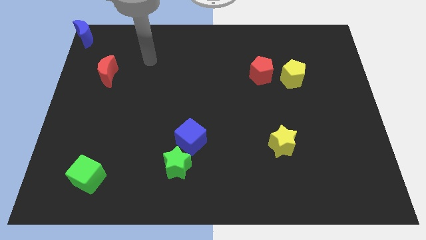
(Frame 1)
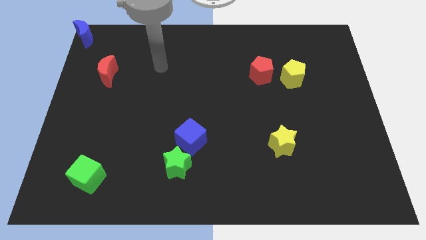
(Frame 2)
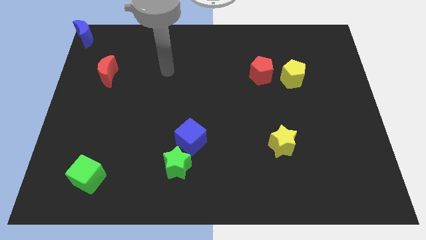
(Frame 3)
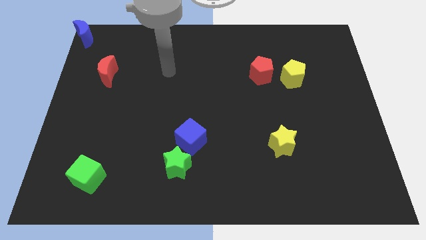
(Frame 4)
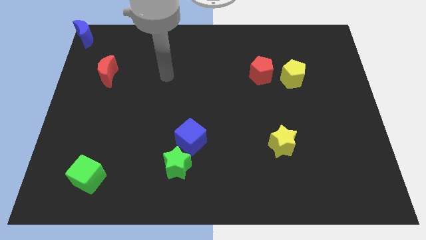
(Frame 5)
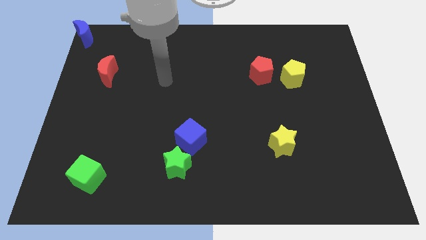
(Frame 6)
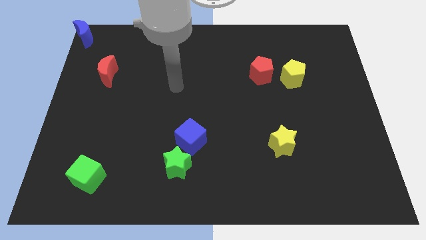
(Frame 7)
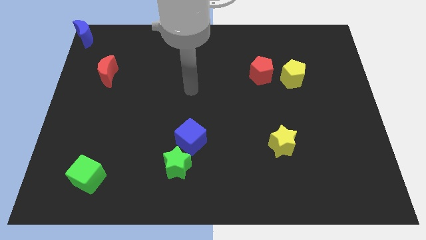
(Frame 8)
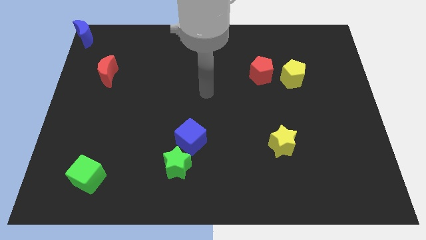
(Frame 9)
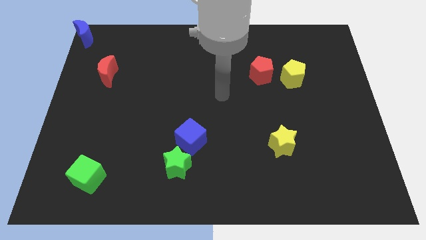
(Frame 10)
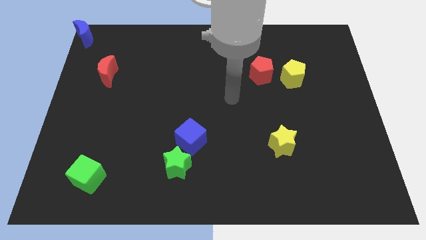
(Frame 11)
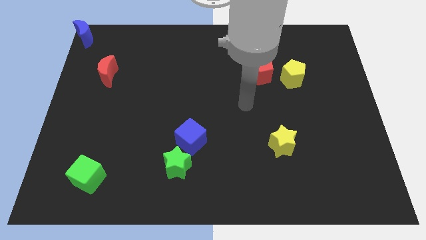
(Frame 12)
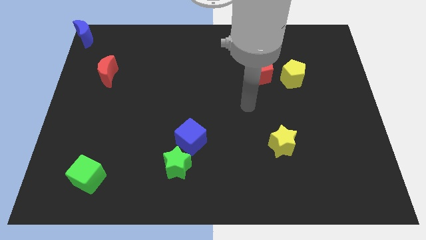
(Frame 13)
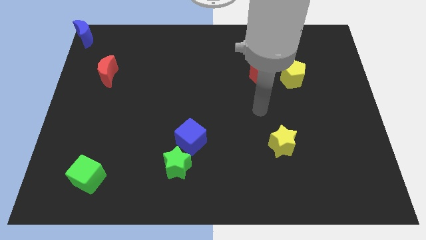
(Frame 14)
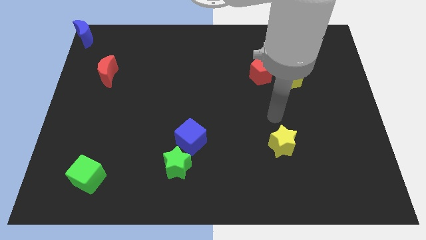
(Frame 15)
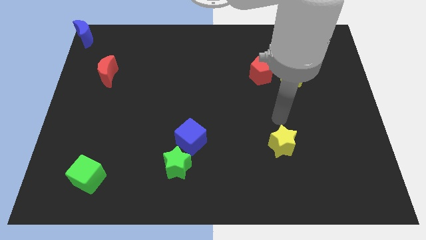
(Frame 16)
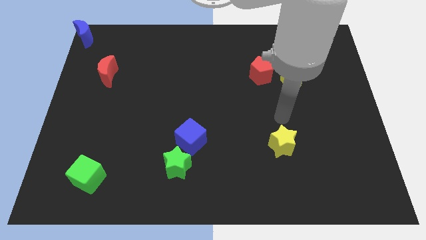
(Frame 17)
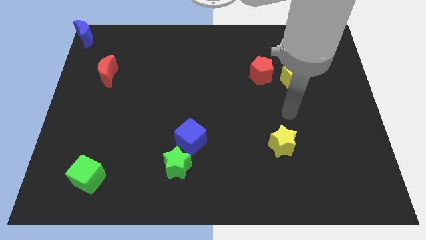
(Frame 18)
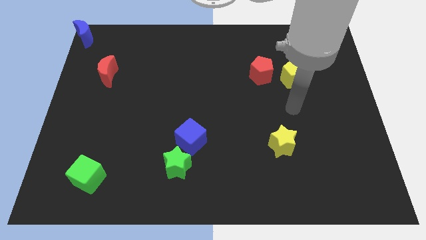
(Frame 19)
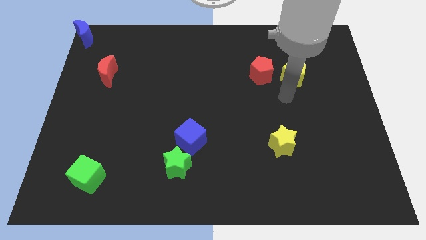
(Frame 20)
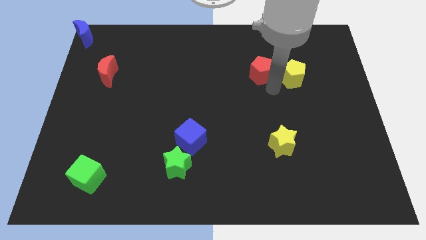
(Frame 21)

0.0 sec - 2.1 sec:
point your arm below the yellow pentagon

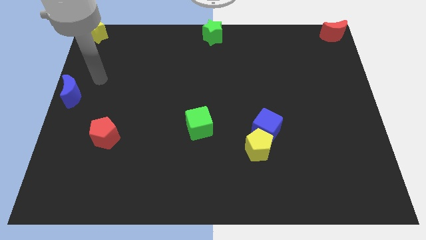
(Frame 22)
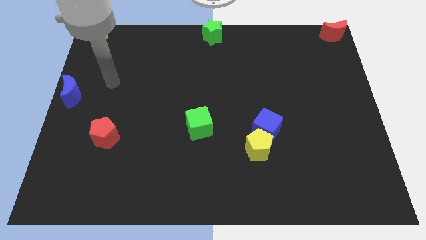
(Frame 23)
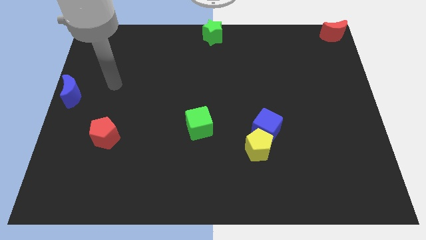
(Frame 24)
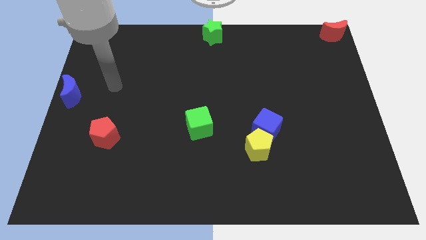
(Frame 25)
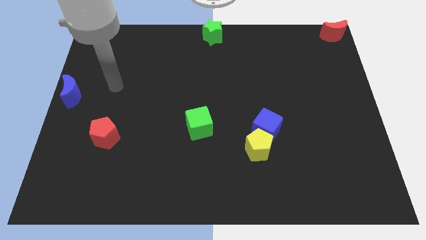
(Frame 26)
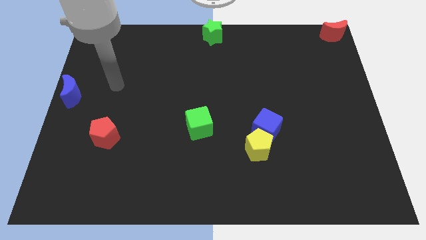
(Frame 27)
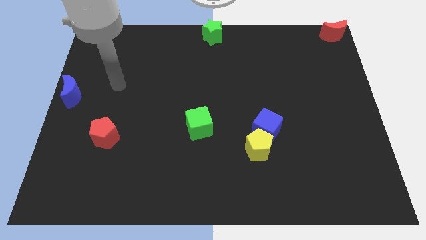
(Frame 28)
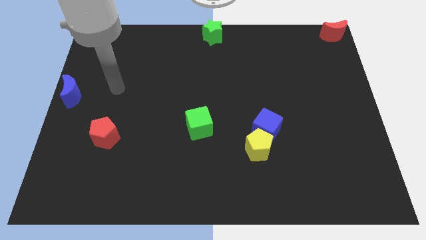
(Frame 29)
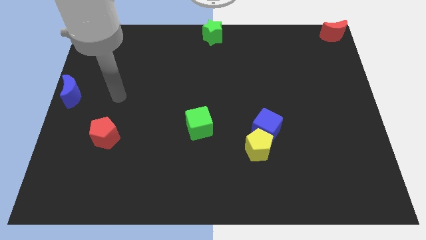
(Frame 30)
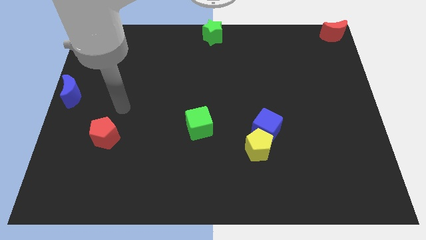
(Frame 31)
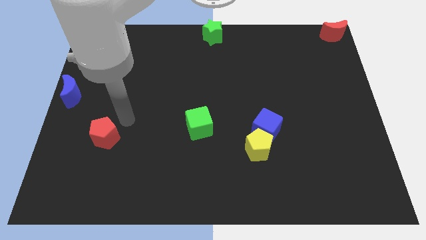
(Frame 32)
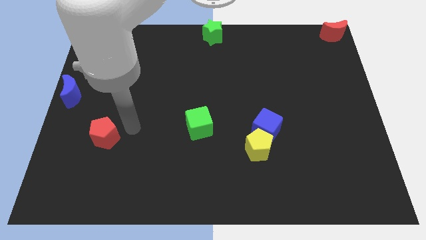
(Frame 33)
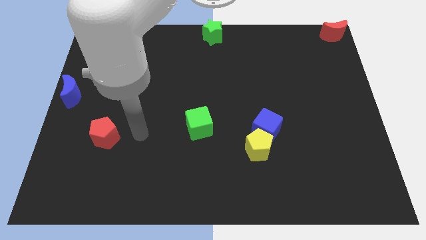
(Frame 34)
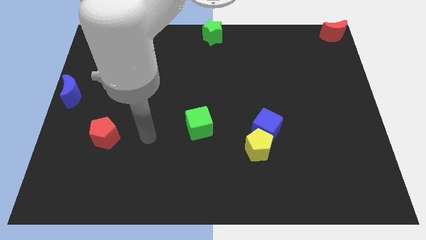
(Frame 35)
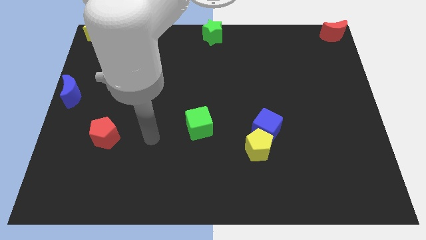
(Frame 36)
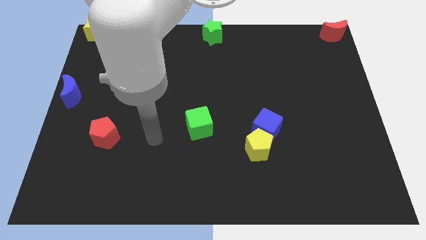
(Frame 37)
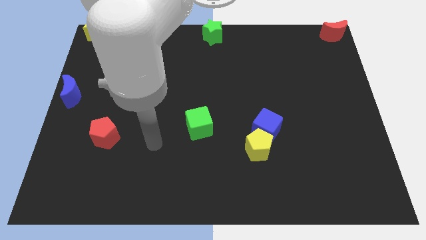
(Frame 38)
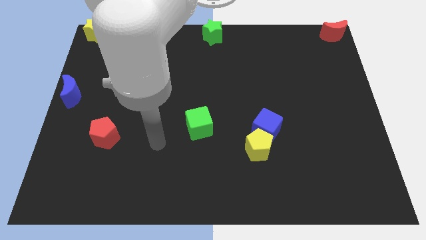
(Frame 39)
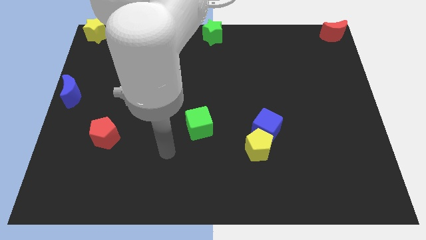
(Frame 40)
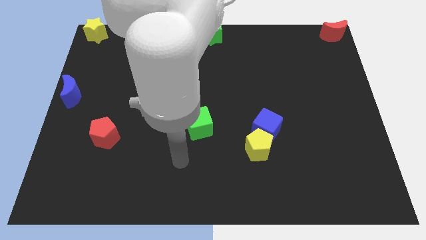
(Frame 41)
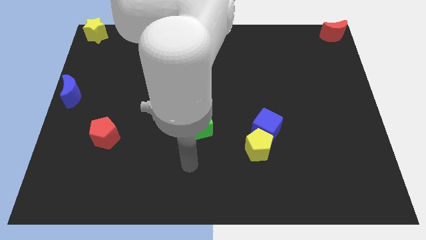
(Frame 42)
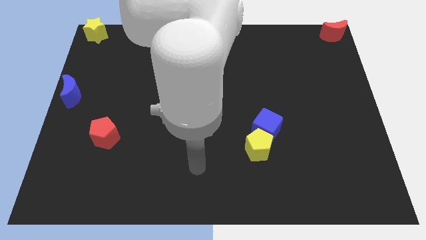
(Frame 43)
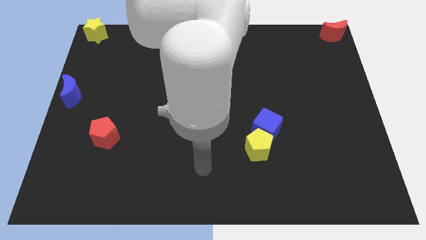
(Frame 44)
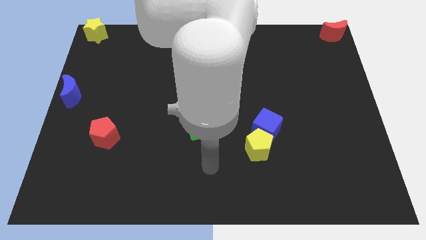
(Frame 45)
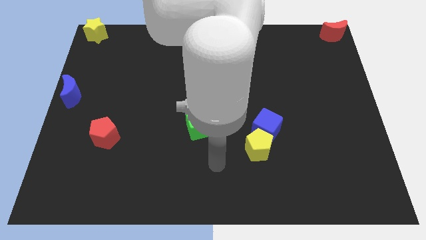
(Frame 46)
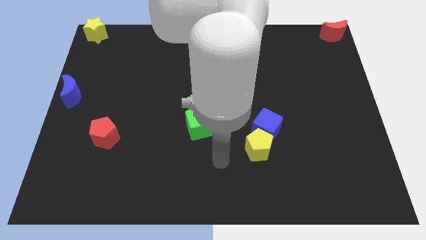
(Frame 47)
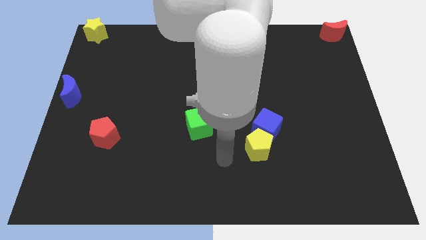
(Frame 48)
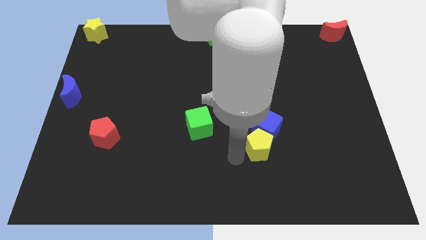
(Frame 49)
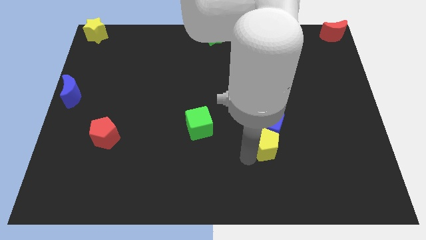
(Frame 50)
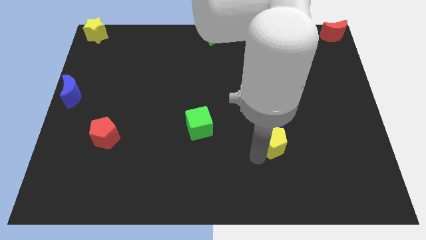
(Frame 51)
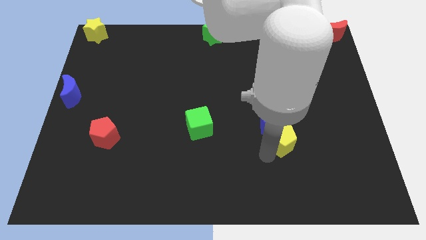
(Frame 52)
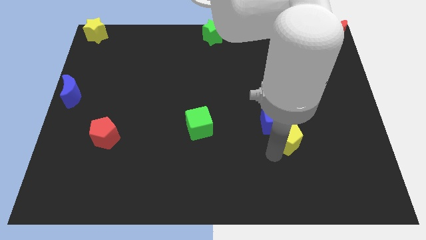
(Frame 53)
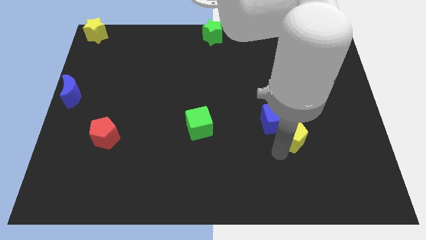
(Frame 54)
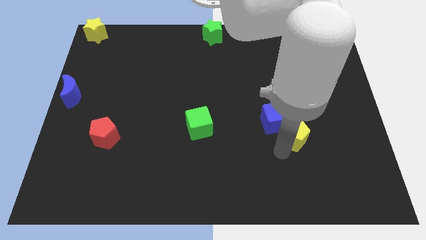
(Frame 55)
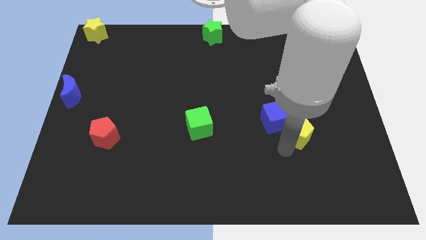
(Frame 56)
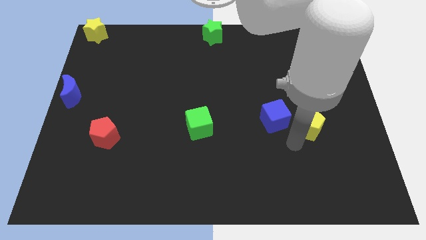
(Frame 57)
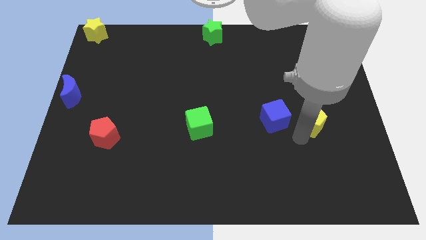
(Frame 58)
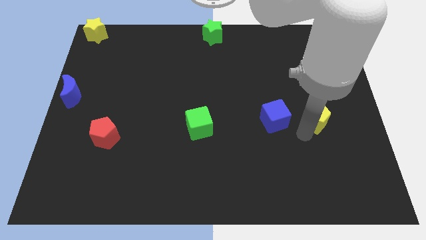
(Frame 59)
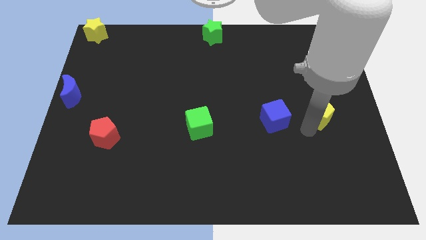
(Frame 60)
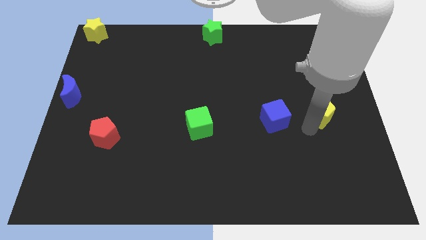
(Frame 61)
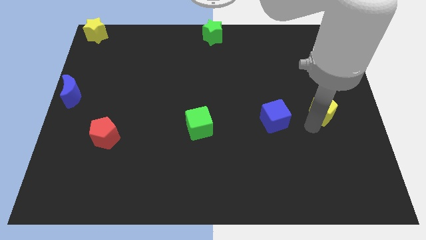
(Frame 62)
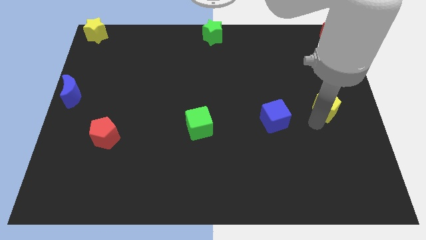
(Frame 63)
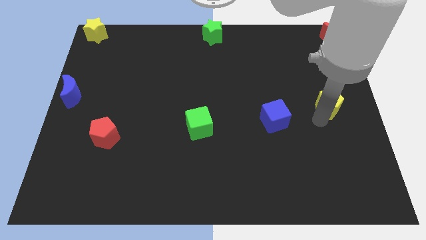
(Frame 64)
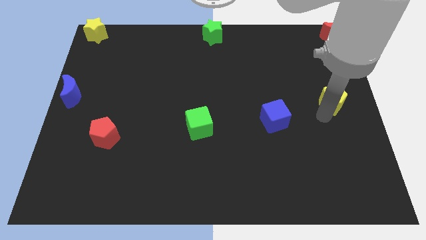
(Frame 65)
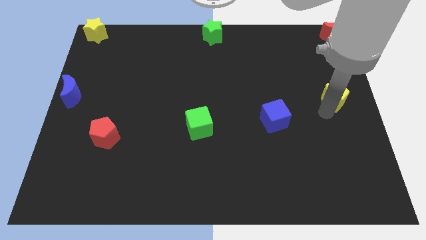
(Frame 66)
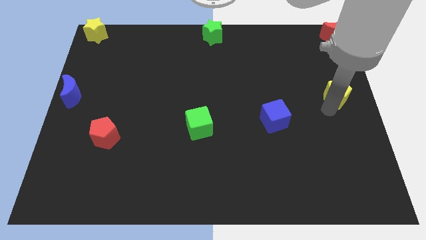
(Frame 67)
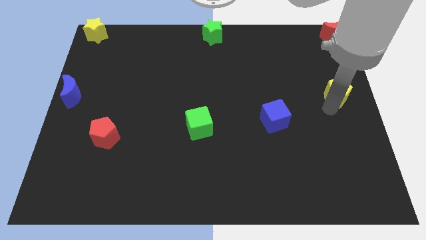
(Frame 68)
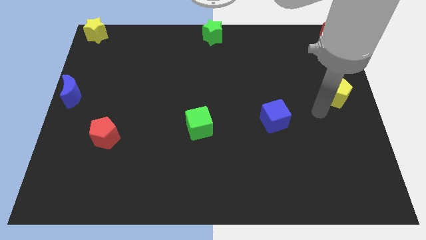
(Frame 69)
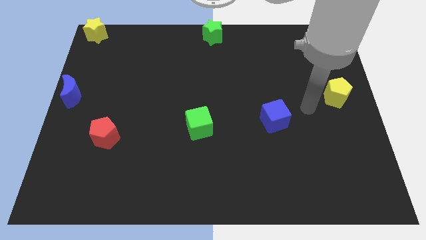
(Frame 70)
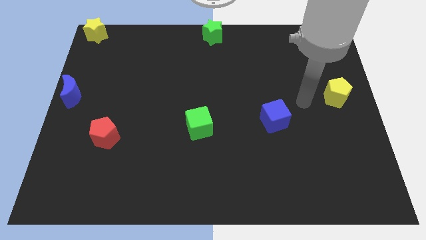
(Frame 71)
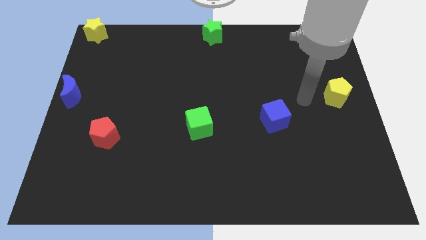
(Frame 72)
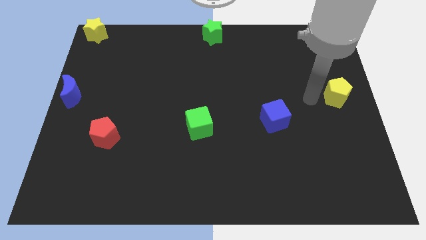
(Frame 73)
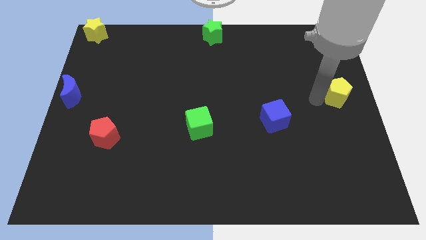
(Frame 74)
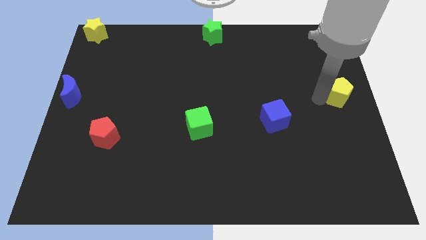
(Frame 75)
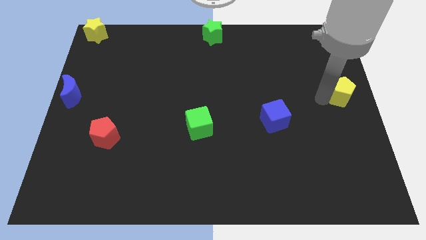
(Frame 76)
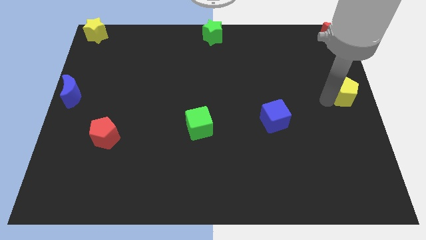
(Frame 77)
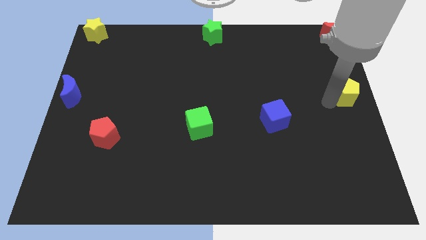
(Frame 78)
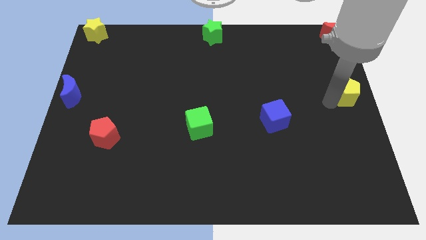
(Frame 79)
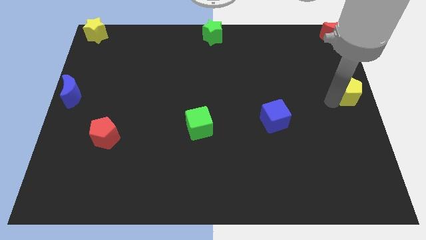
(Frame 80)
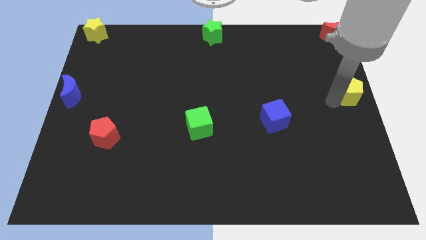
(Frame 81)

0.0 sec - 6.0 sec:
separate yellow pentagon from the blue cube

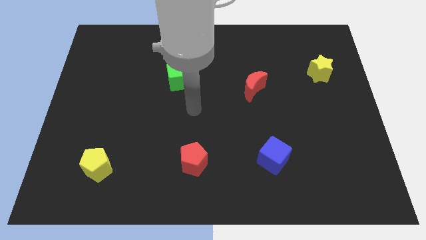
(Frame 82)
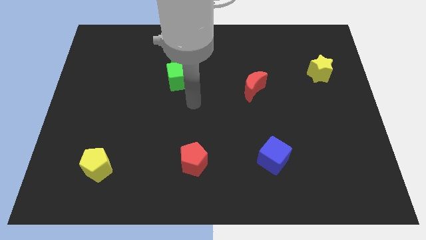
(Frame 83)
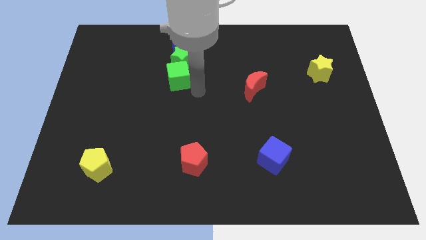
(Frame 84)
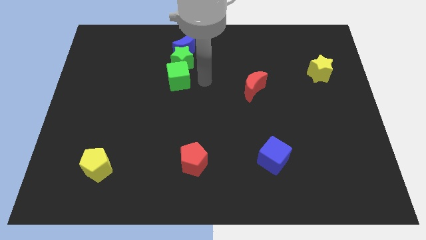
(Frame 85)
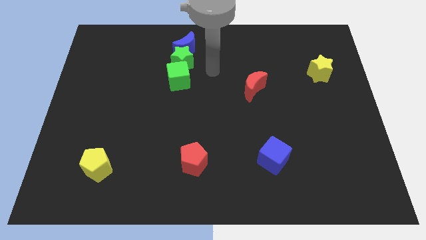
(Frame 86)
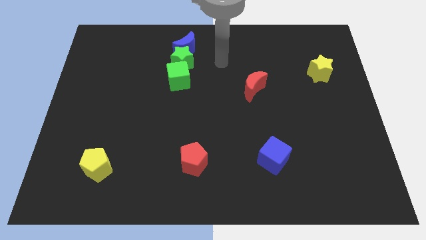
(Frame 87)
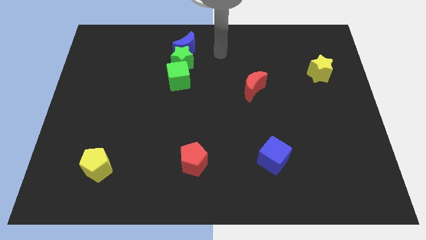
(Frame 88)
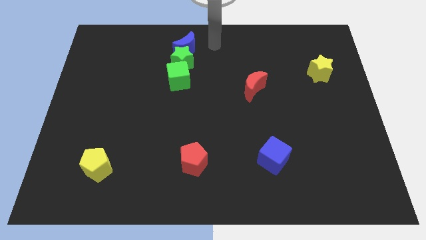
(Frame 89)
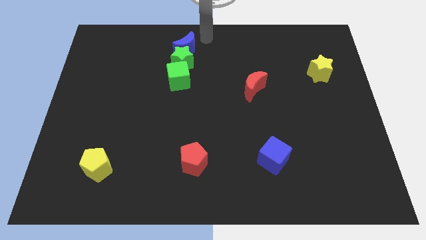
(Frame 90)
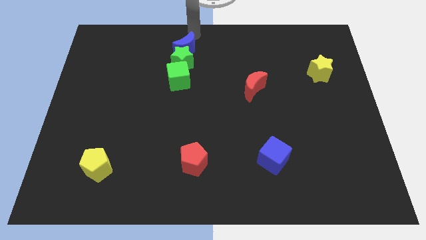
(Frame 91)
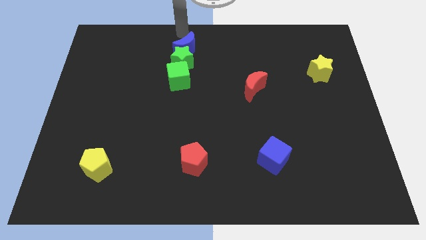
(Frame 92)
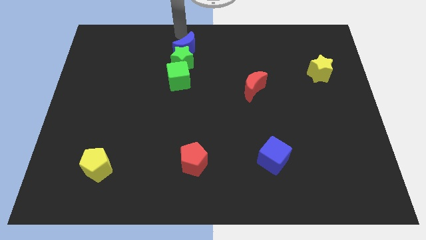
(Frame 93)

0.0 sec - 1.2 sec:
move the arm towards the blue moon
